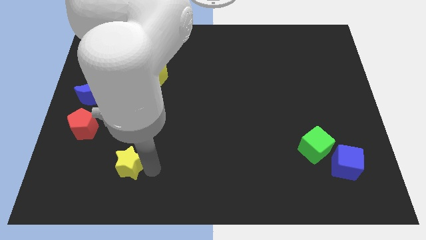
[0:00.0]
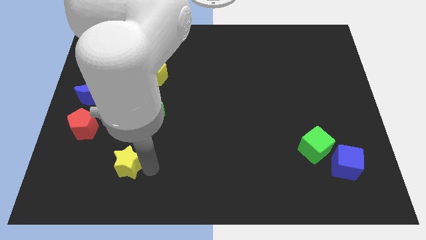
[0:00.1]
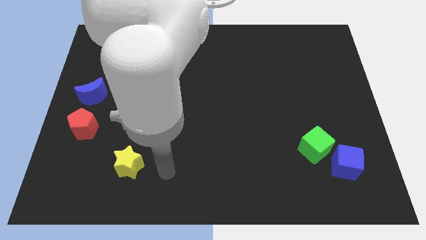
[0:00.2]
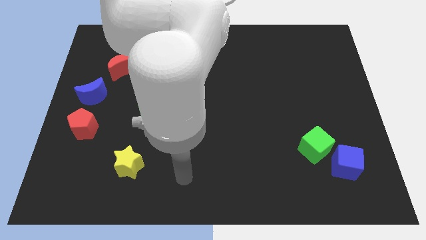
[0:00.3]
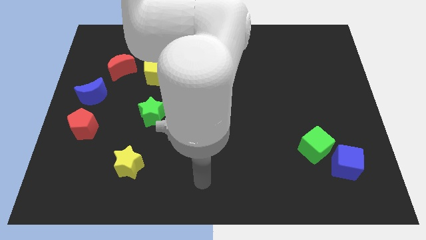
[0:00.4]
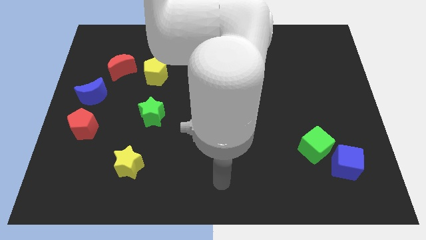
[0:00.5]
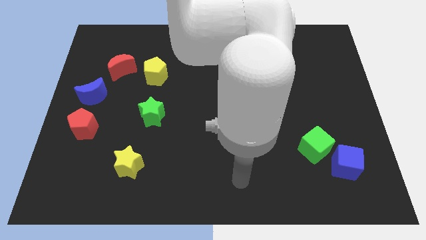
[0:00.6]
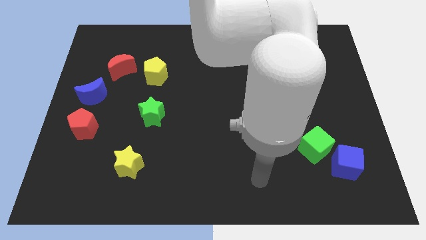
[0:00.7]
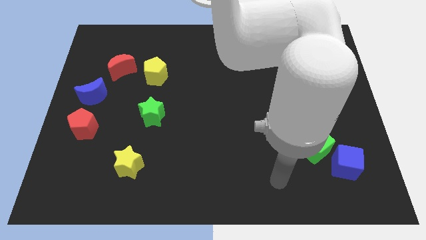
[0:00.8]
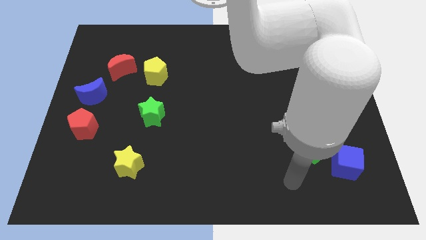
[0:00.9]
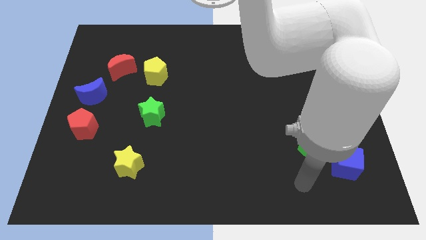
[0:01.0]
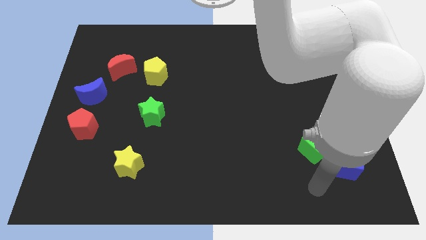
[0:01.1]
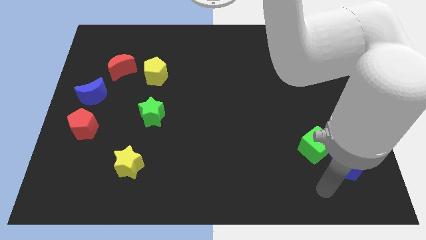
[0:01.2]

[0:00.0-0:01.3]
move your arm away from yellow star

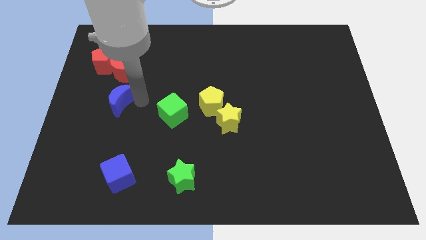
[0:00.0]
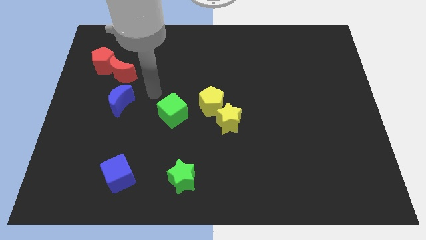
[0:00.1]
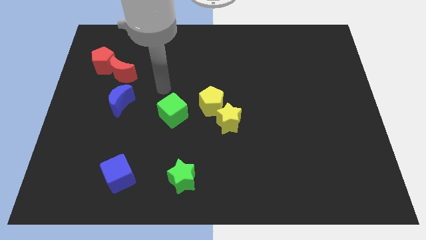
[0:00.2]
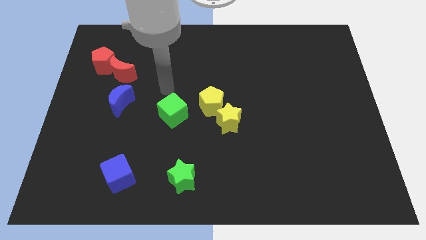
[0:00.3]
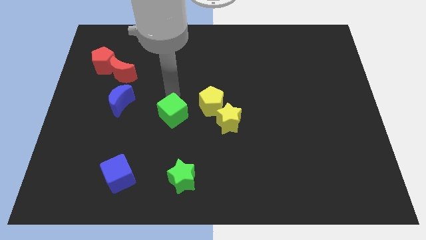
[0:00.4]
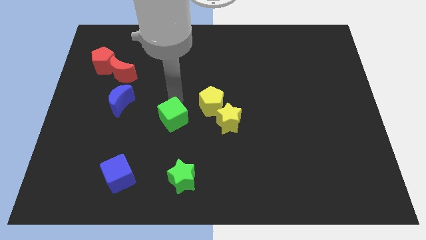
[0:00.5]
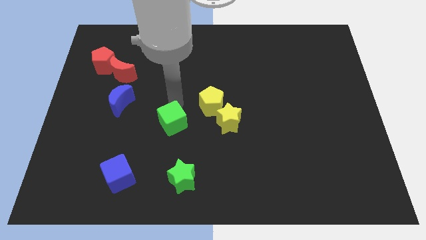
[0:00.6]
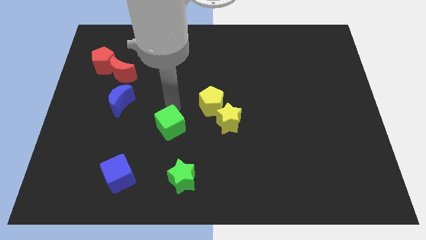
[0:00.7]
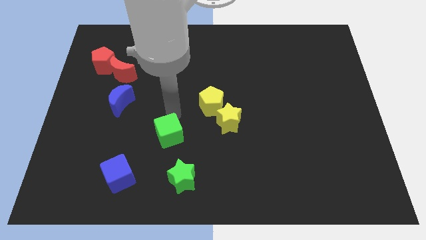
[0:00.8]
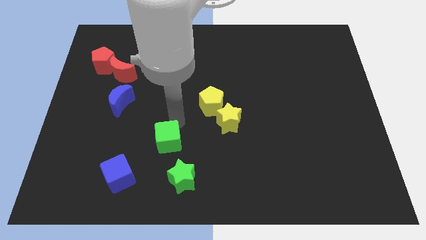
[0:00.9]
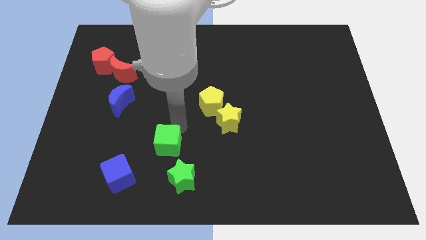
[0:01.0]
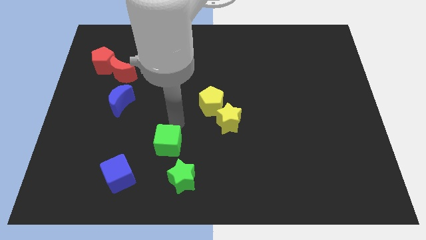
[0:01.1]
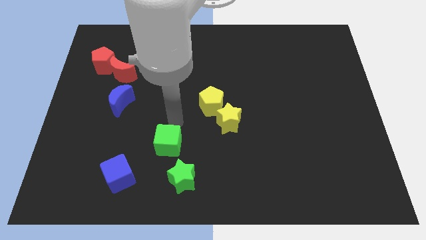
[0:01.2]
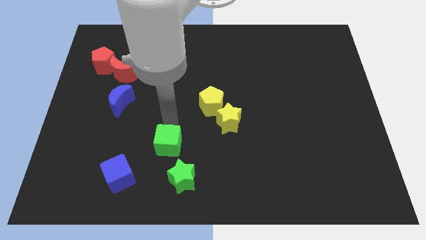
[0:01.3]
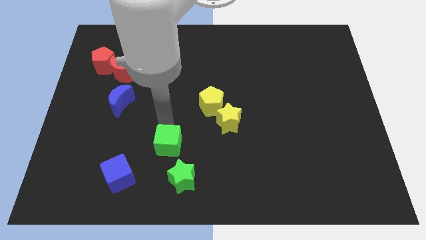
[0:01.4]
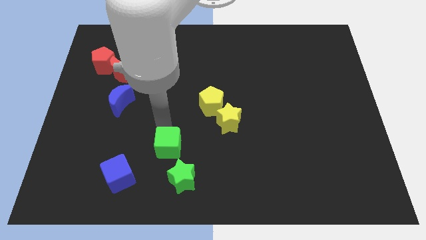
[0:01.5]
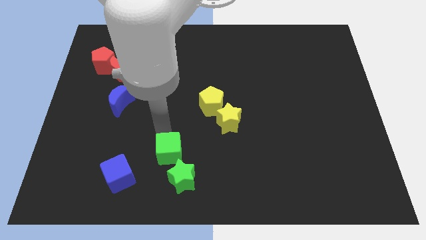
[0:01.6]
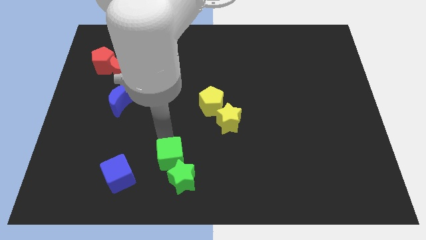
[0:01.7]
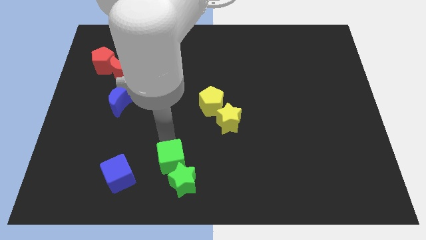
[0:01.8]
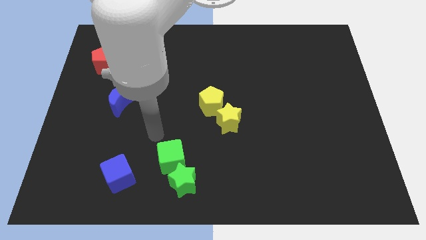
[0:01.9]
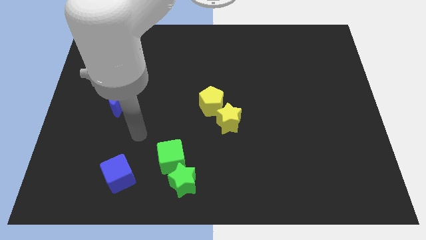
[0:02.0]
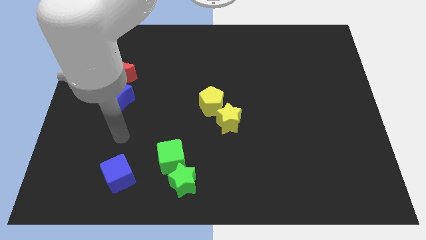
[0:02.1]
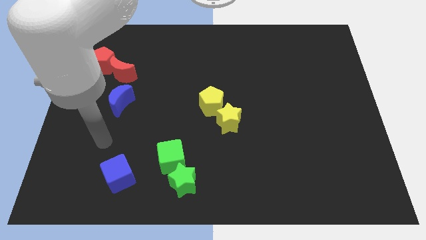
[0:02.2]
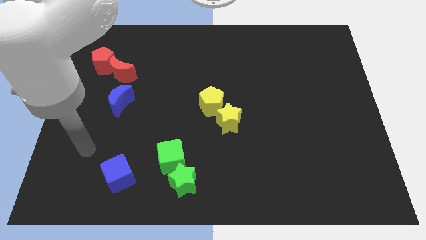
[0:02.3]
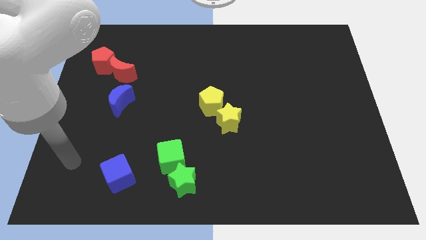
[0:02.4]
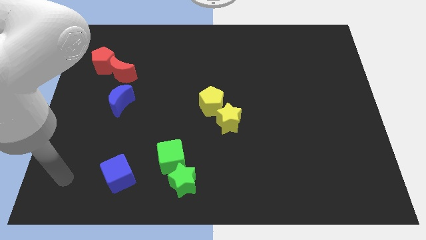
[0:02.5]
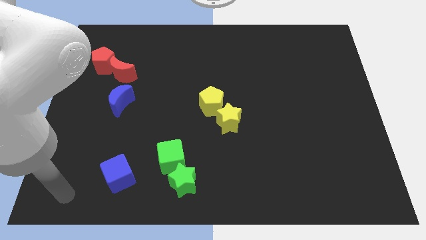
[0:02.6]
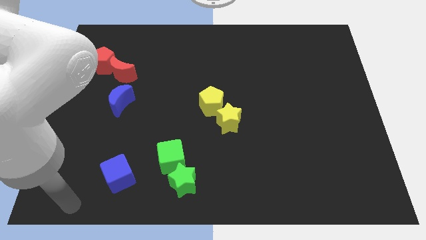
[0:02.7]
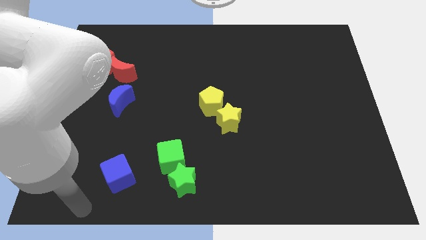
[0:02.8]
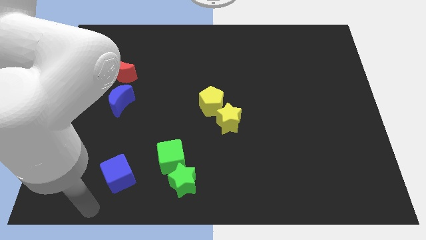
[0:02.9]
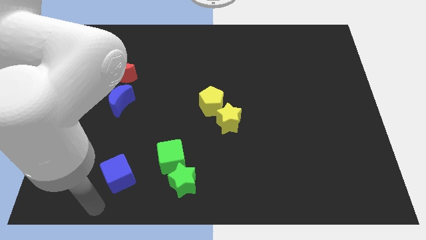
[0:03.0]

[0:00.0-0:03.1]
move the green cube to the top of the green star

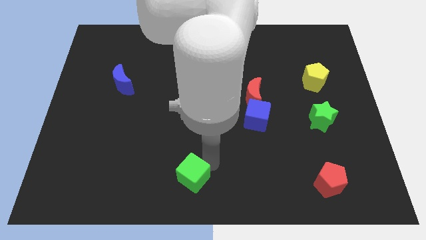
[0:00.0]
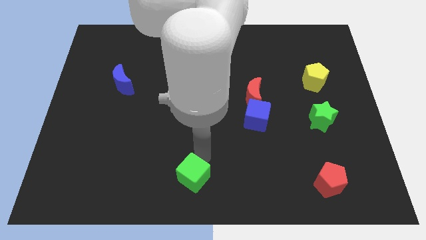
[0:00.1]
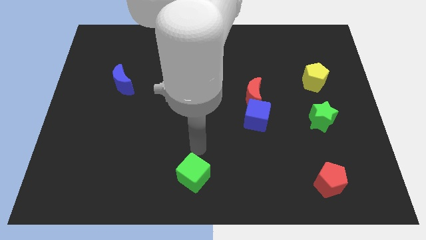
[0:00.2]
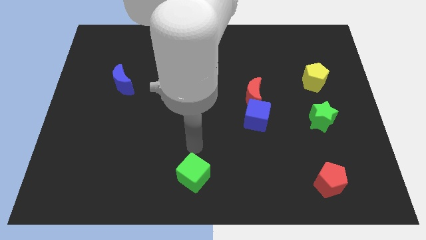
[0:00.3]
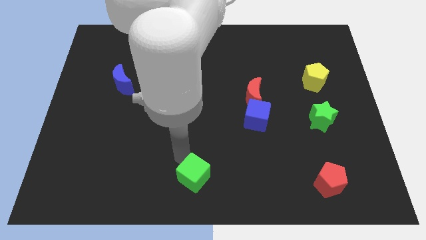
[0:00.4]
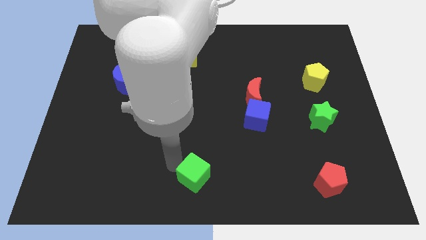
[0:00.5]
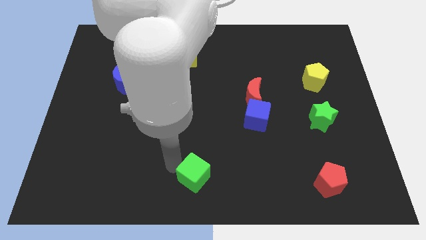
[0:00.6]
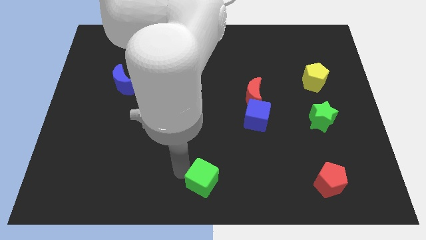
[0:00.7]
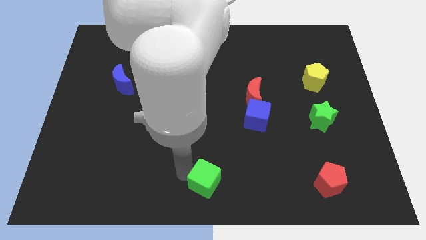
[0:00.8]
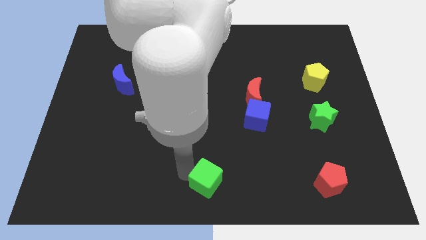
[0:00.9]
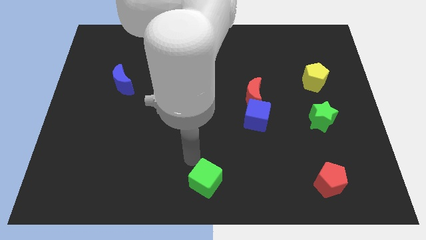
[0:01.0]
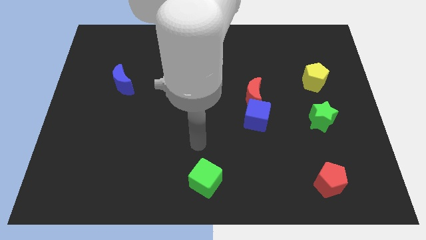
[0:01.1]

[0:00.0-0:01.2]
push the green cube to the bottom center of the board

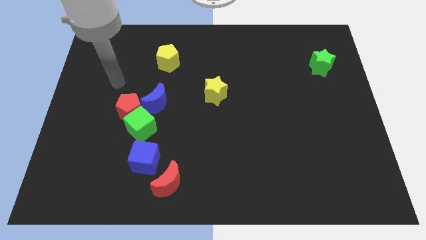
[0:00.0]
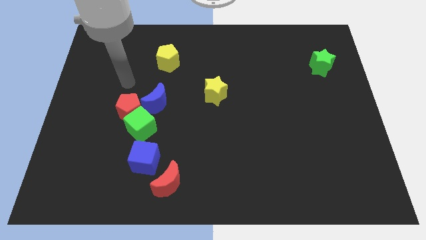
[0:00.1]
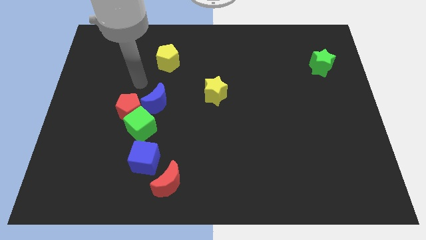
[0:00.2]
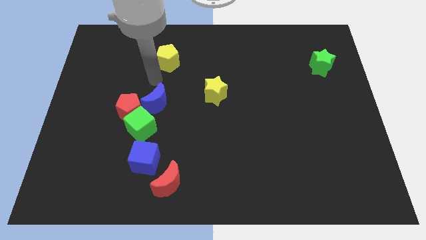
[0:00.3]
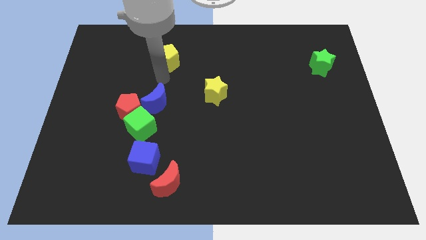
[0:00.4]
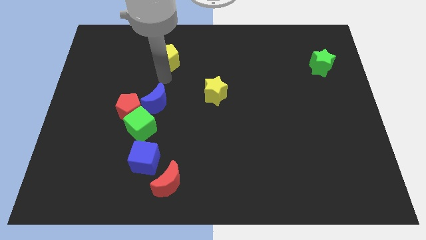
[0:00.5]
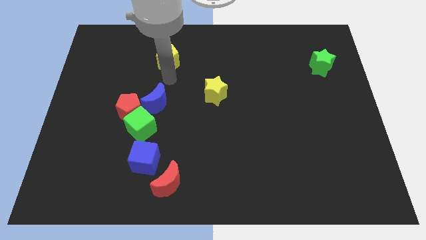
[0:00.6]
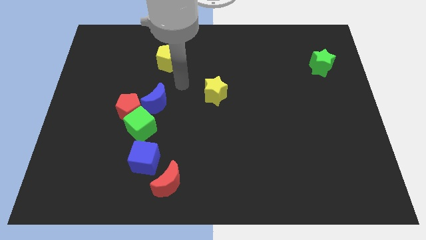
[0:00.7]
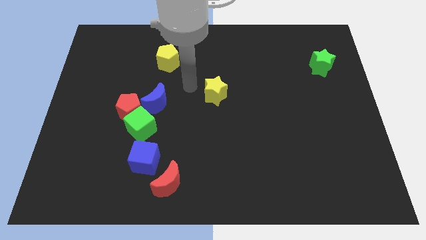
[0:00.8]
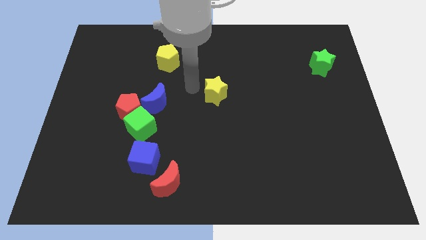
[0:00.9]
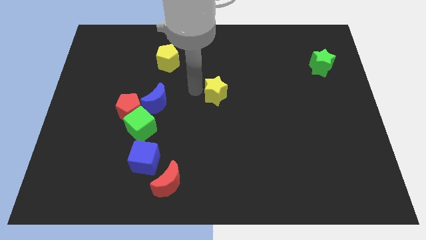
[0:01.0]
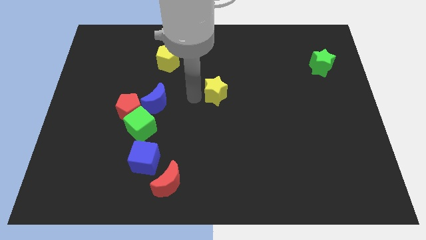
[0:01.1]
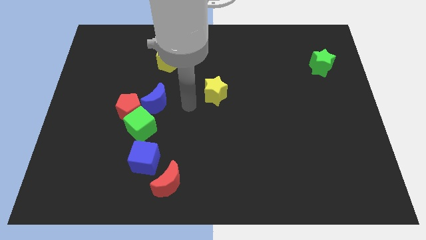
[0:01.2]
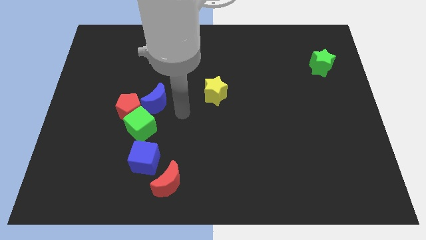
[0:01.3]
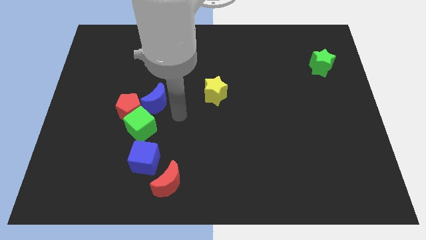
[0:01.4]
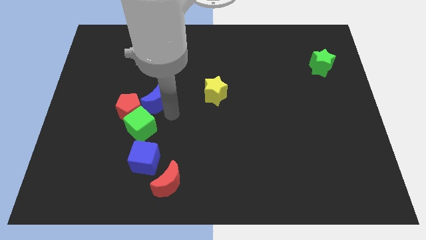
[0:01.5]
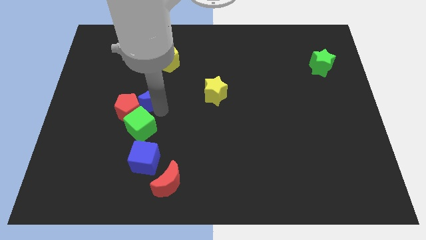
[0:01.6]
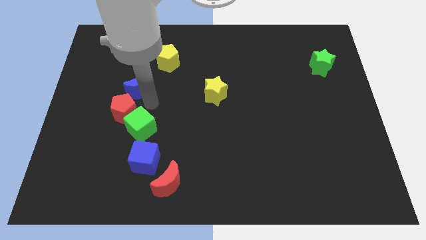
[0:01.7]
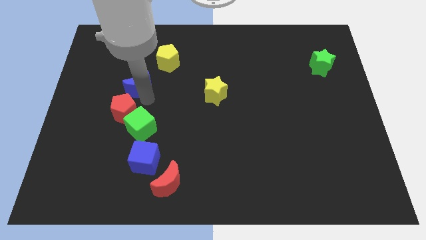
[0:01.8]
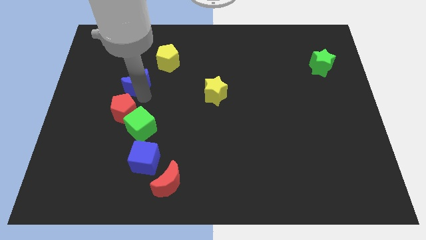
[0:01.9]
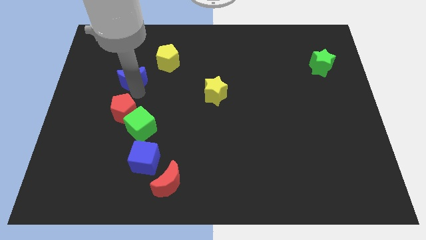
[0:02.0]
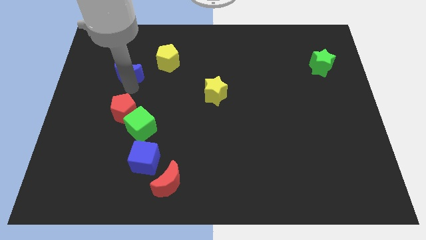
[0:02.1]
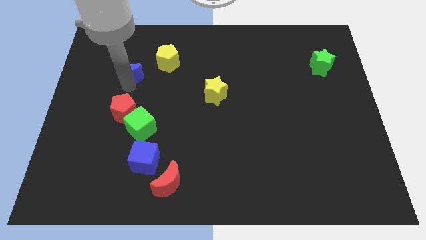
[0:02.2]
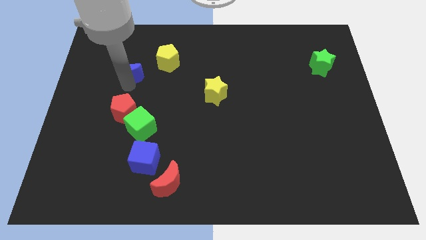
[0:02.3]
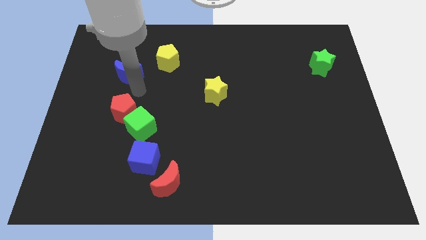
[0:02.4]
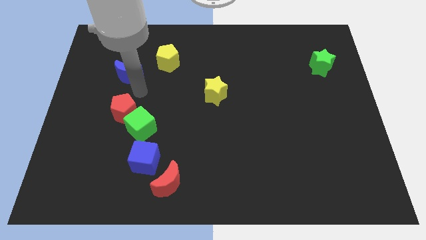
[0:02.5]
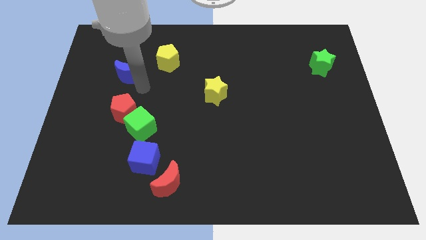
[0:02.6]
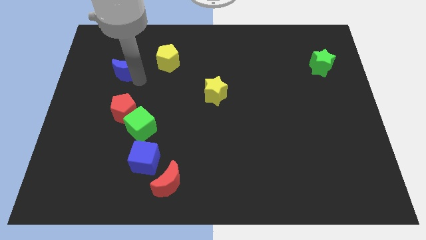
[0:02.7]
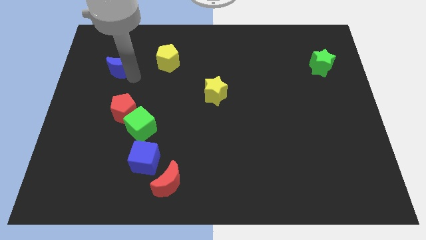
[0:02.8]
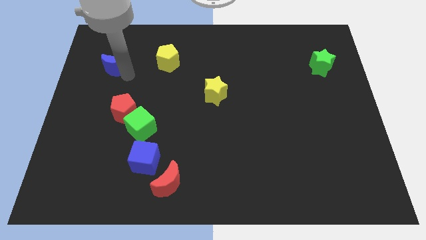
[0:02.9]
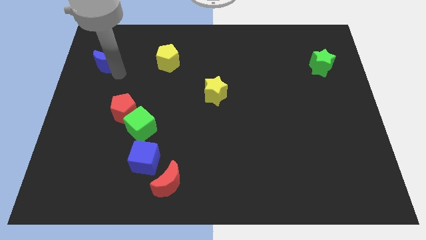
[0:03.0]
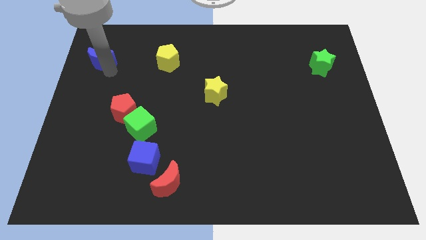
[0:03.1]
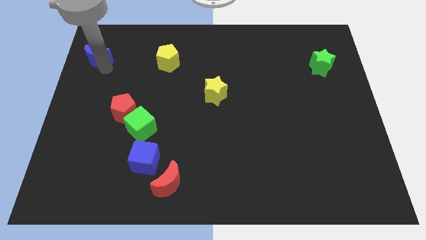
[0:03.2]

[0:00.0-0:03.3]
separate the blue crescent from the red pentagon
